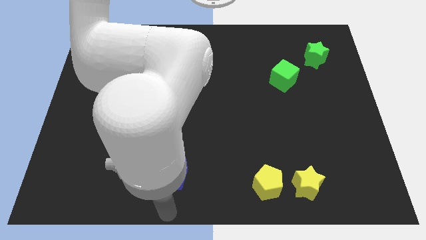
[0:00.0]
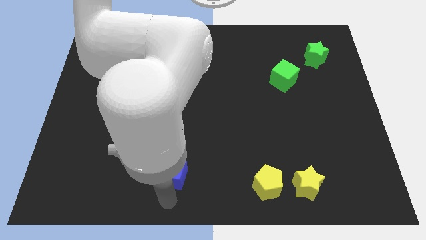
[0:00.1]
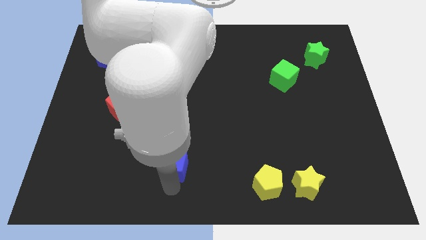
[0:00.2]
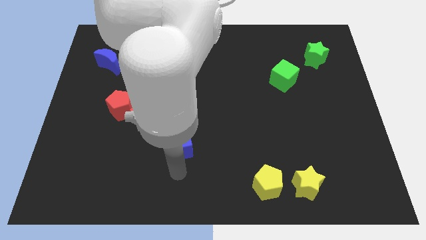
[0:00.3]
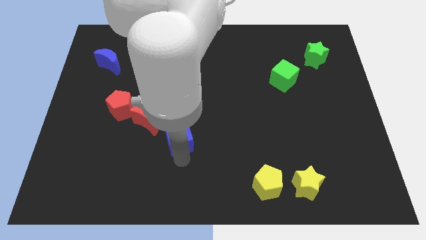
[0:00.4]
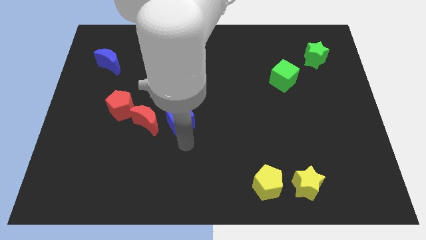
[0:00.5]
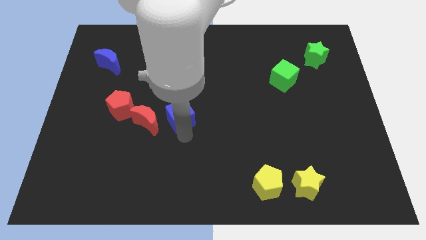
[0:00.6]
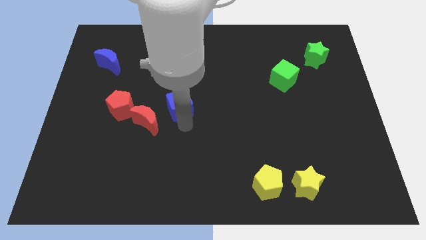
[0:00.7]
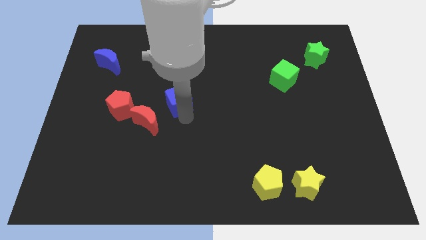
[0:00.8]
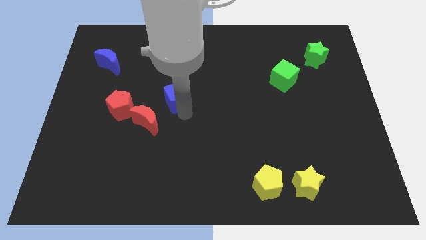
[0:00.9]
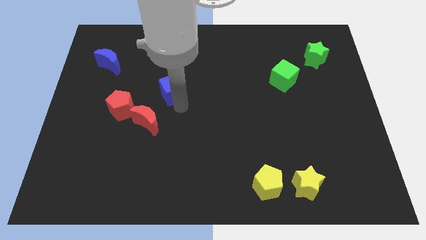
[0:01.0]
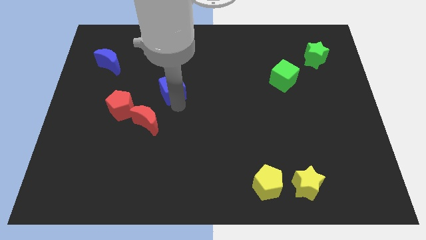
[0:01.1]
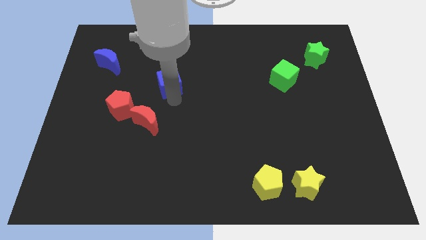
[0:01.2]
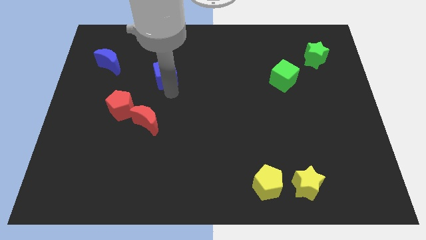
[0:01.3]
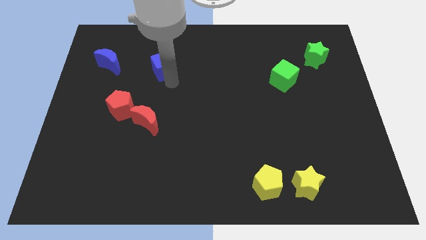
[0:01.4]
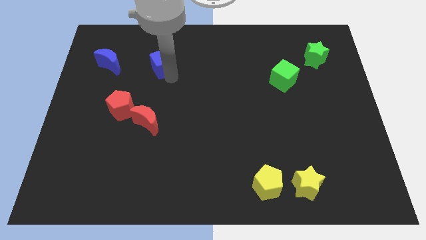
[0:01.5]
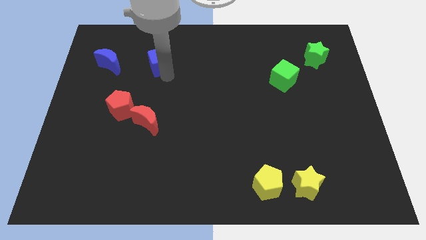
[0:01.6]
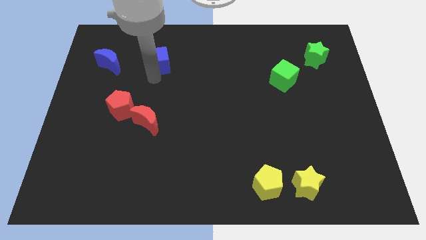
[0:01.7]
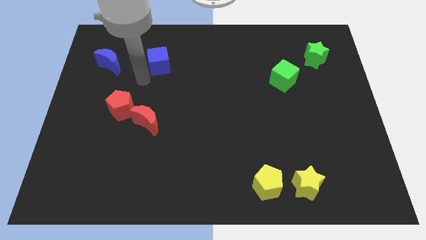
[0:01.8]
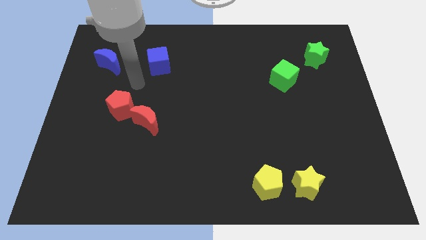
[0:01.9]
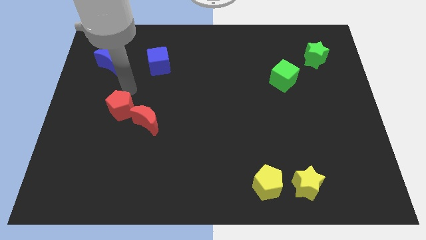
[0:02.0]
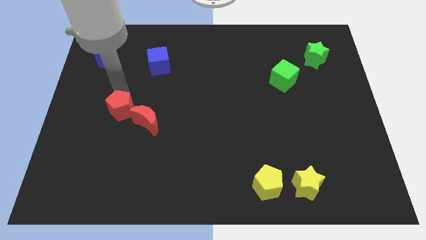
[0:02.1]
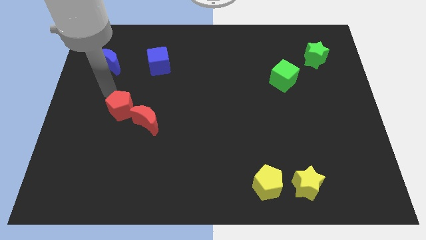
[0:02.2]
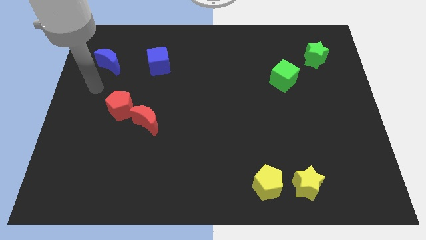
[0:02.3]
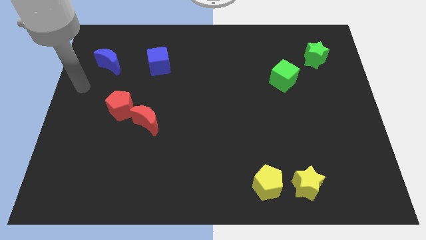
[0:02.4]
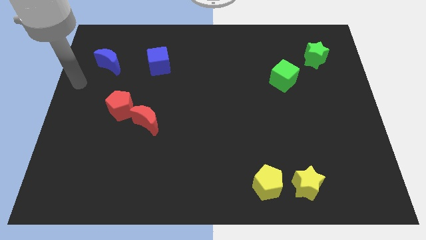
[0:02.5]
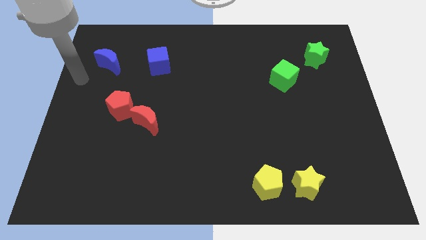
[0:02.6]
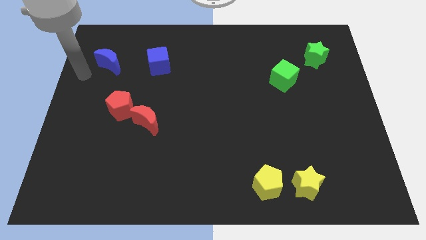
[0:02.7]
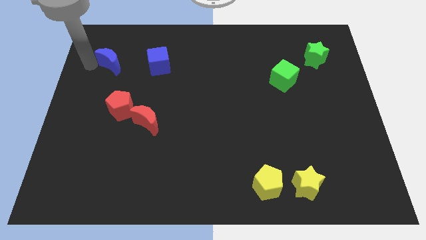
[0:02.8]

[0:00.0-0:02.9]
drag the blue cube to the top

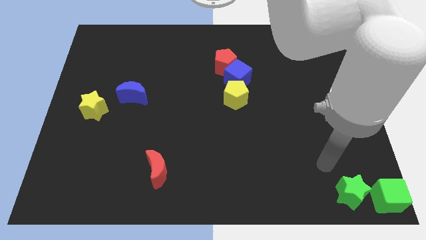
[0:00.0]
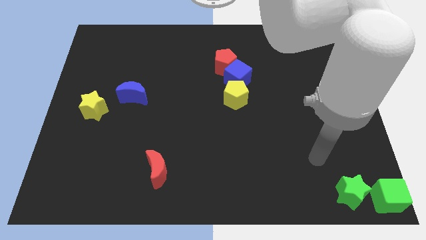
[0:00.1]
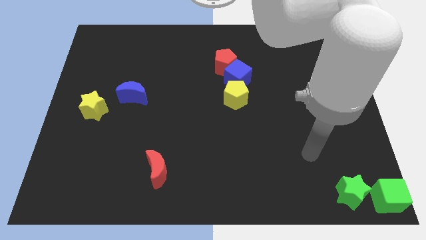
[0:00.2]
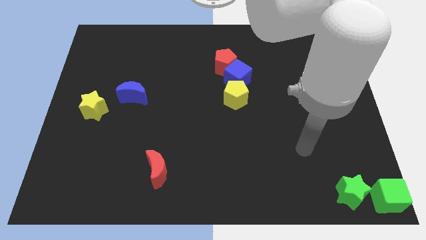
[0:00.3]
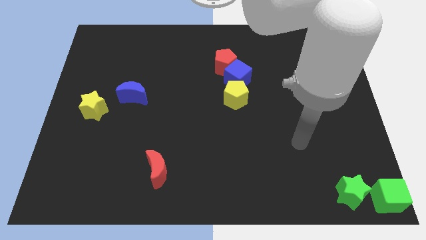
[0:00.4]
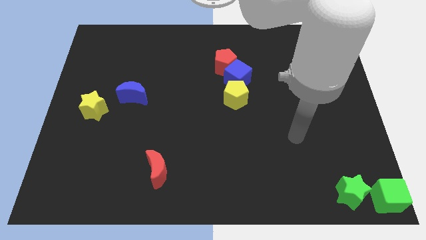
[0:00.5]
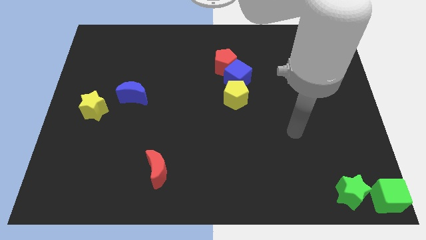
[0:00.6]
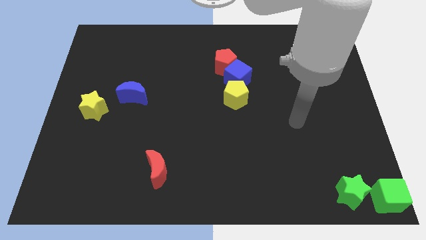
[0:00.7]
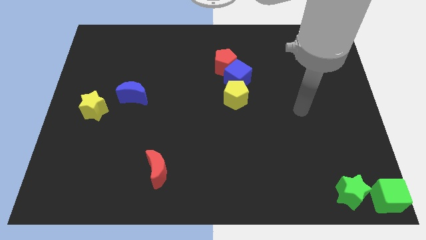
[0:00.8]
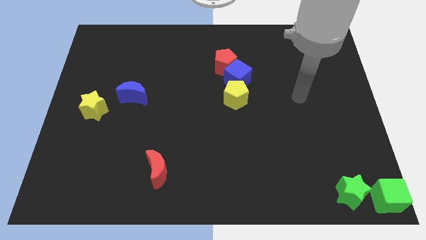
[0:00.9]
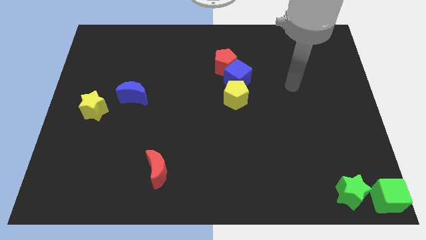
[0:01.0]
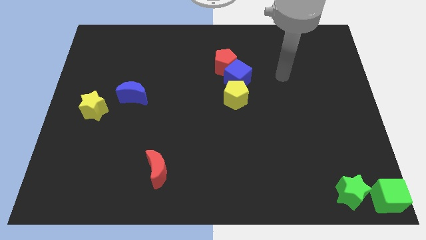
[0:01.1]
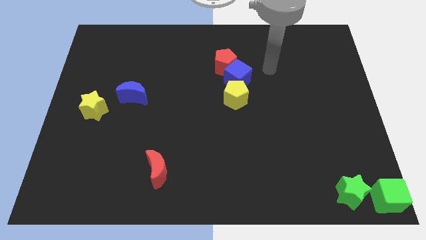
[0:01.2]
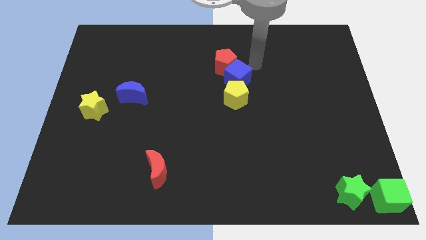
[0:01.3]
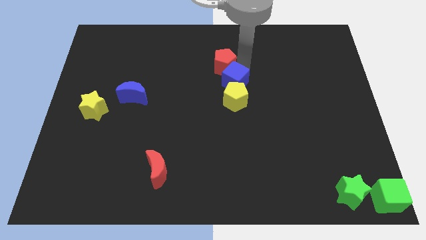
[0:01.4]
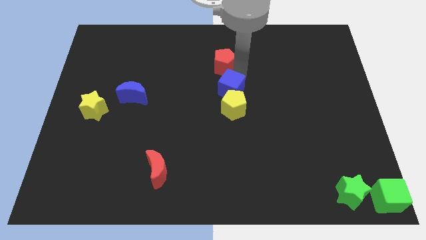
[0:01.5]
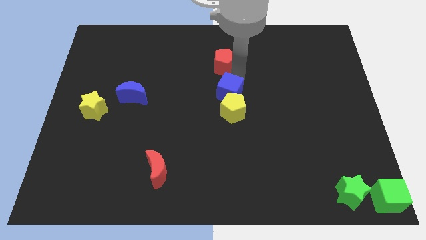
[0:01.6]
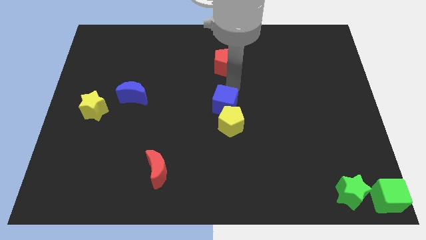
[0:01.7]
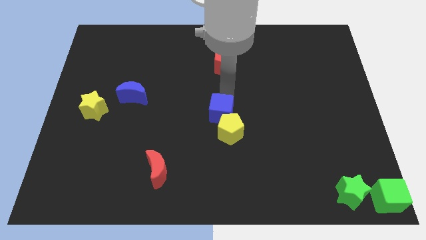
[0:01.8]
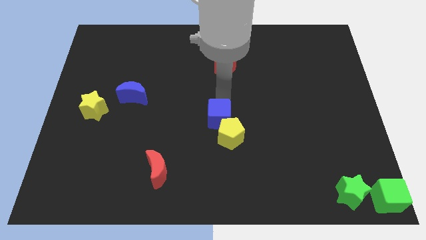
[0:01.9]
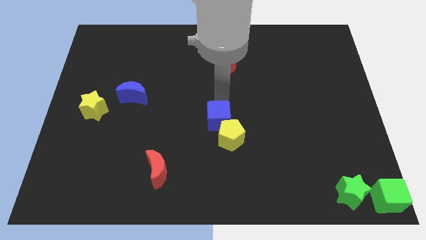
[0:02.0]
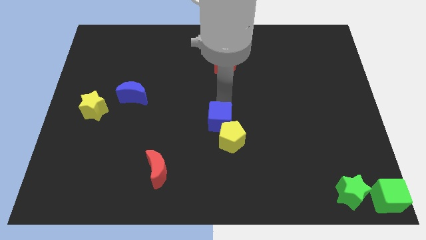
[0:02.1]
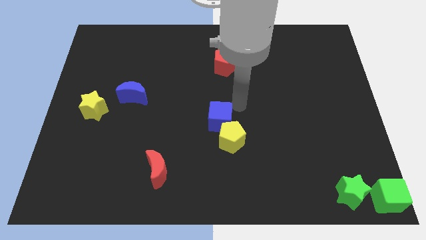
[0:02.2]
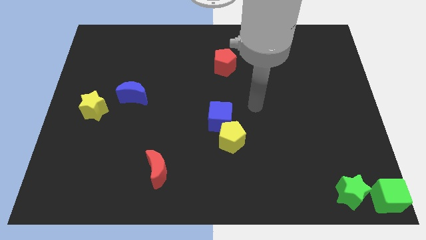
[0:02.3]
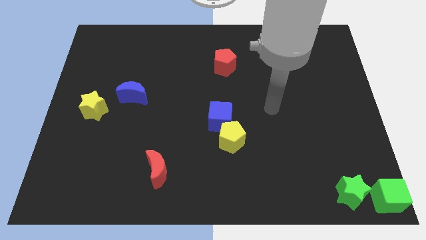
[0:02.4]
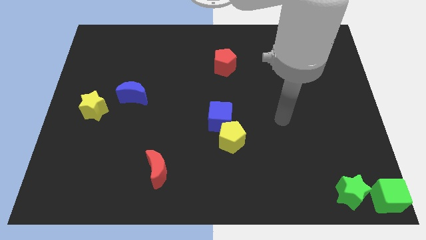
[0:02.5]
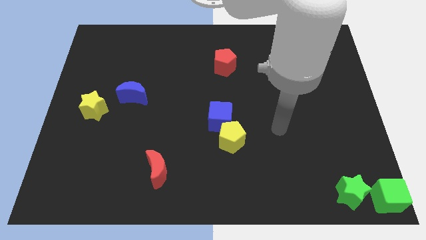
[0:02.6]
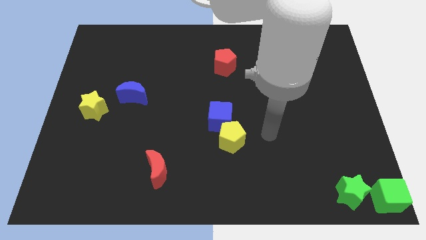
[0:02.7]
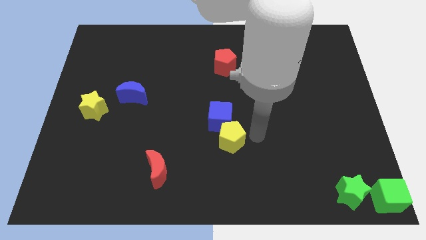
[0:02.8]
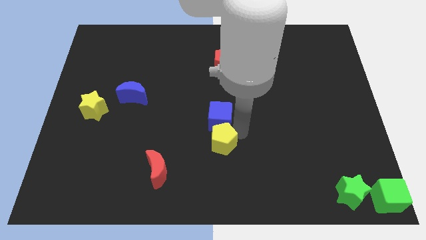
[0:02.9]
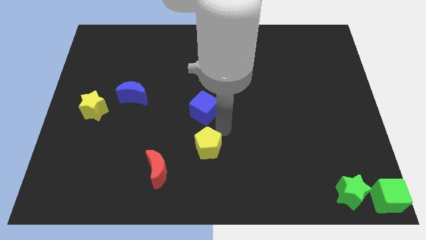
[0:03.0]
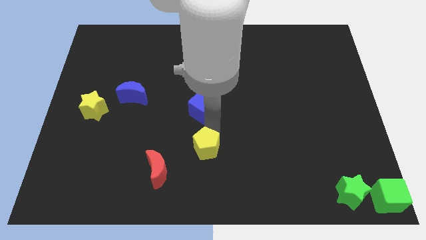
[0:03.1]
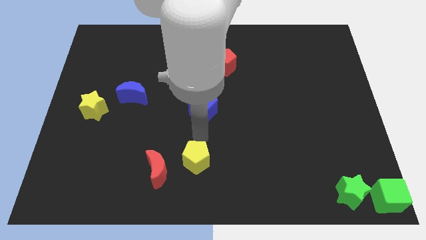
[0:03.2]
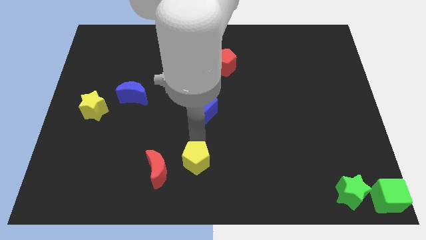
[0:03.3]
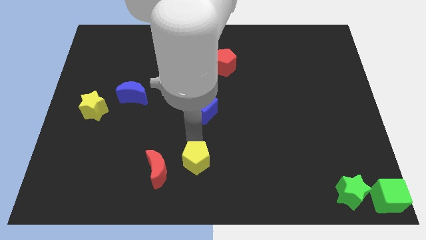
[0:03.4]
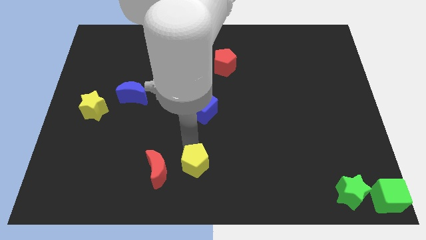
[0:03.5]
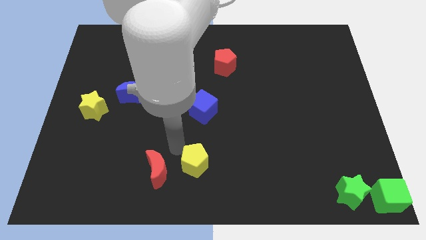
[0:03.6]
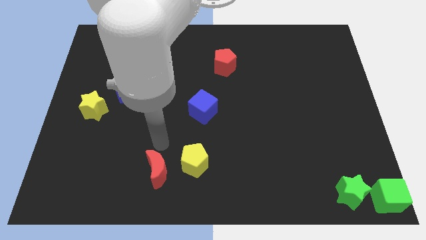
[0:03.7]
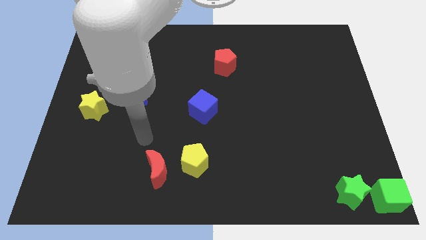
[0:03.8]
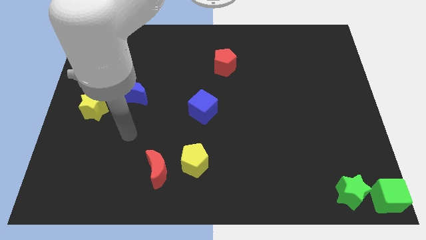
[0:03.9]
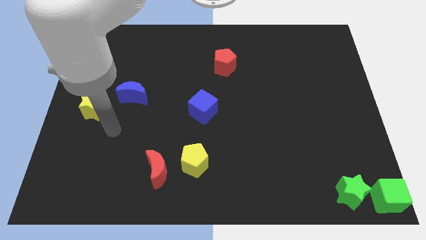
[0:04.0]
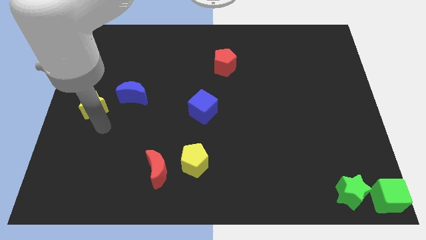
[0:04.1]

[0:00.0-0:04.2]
separate the blue cube and the yellow pentagon

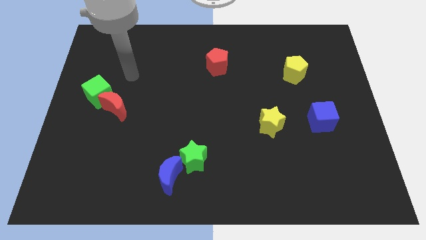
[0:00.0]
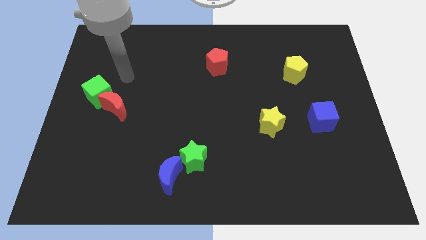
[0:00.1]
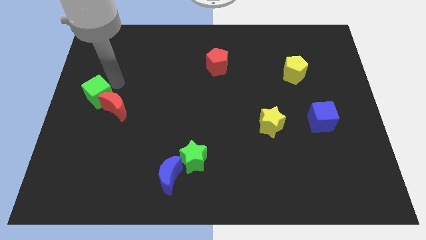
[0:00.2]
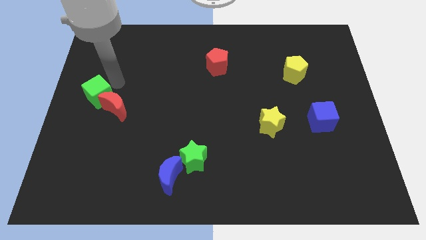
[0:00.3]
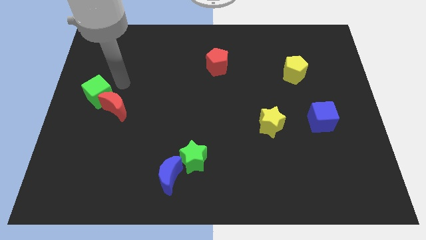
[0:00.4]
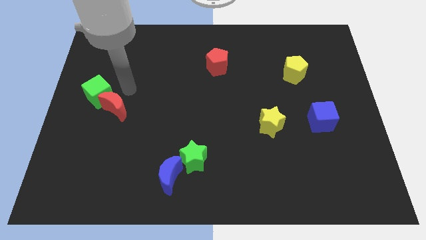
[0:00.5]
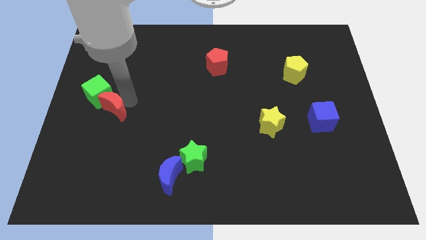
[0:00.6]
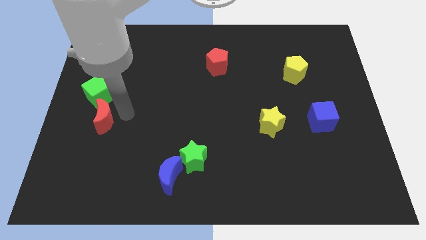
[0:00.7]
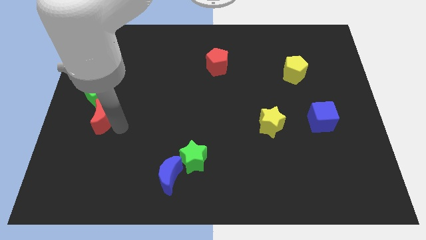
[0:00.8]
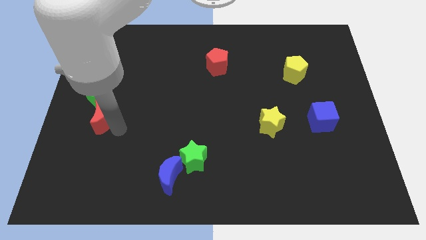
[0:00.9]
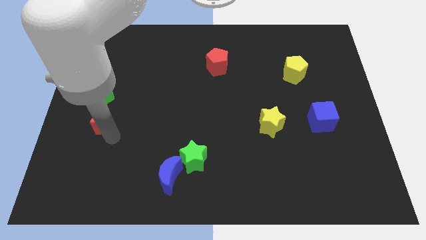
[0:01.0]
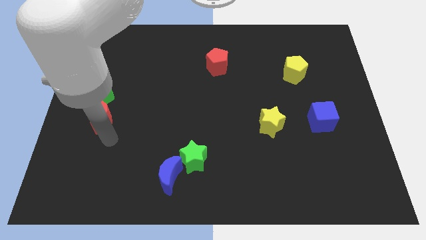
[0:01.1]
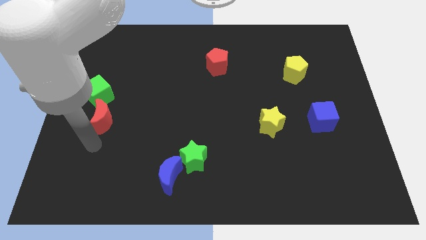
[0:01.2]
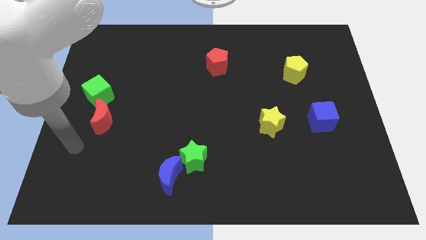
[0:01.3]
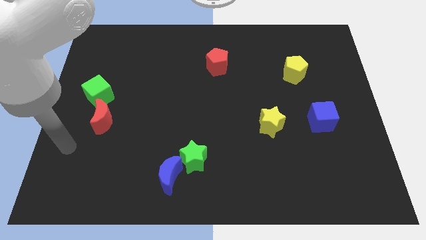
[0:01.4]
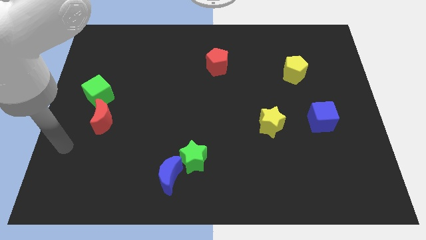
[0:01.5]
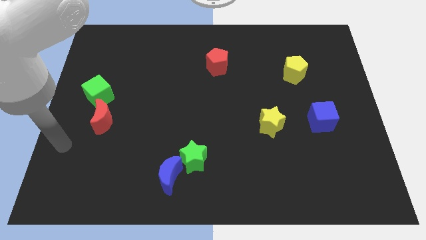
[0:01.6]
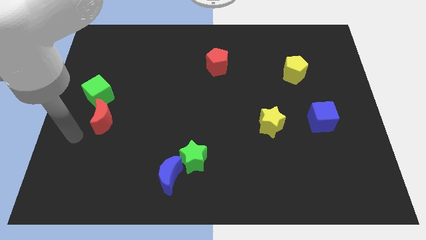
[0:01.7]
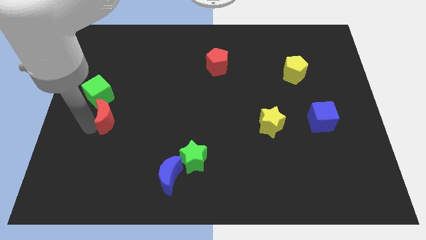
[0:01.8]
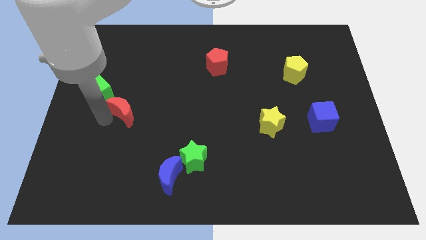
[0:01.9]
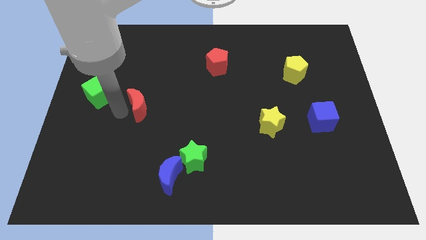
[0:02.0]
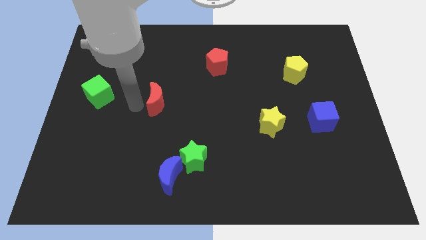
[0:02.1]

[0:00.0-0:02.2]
separate the green cube and the red moon
